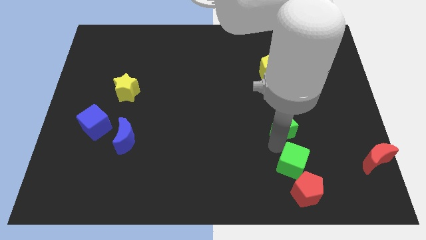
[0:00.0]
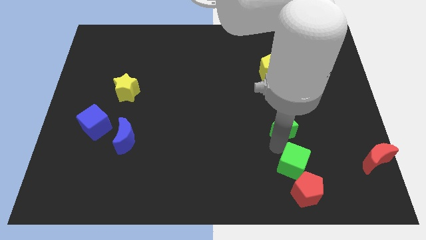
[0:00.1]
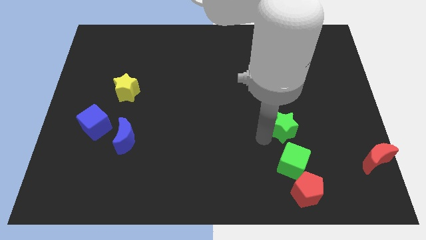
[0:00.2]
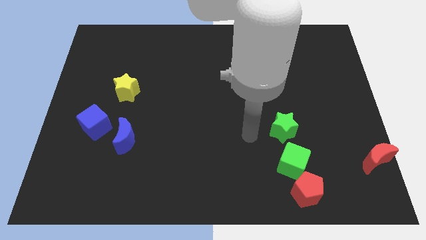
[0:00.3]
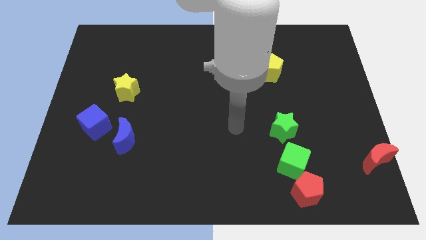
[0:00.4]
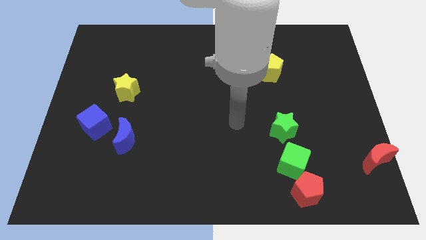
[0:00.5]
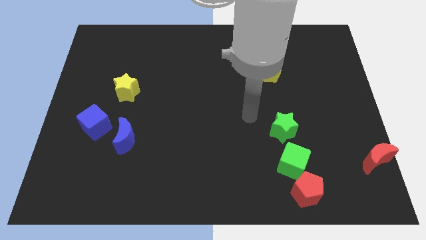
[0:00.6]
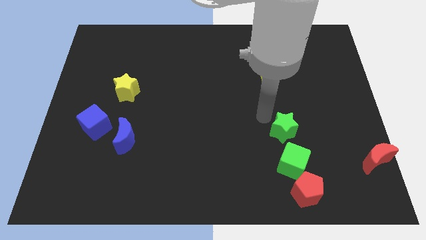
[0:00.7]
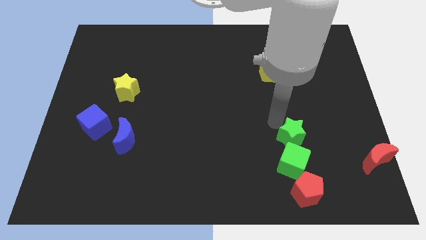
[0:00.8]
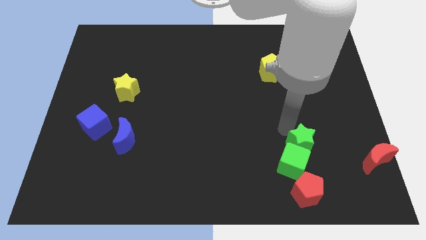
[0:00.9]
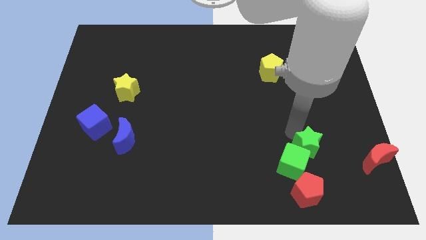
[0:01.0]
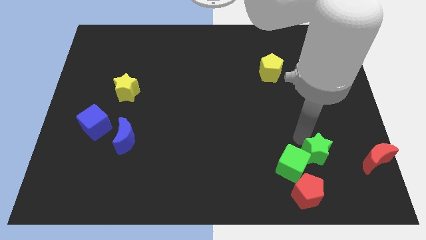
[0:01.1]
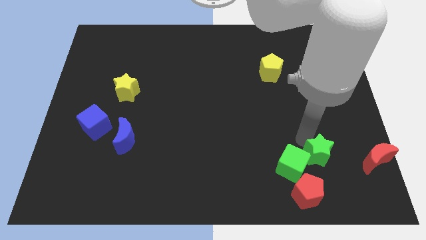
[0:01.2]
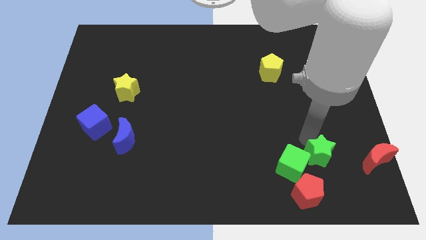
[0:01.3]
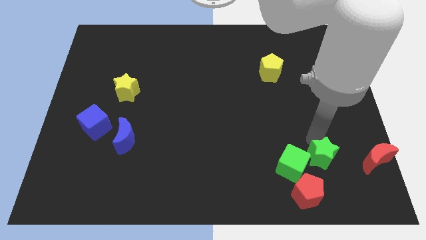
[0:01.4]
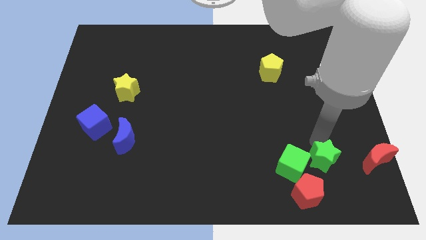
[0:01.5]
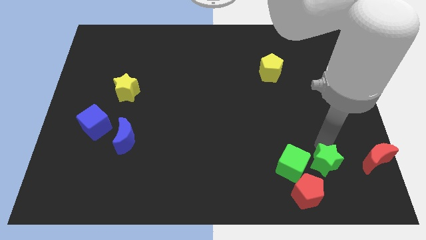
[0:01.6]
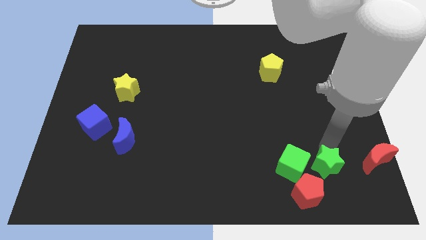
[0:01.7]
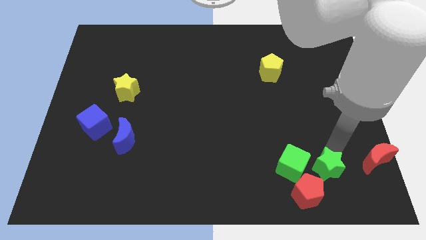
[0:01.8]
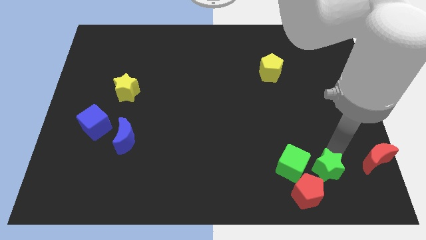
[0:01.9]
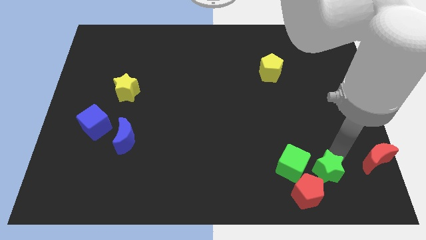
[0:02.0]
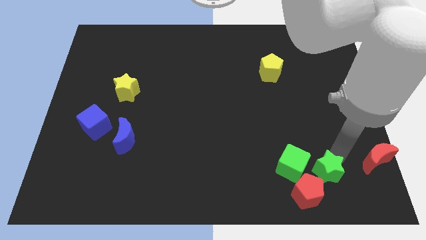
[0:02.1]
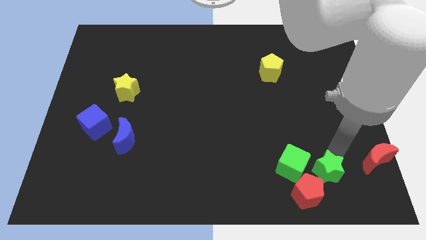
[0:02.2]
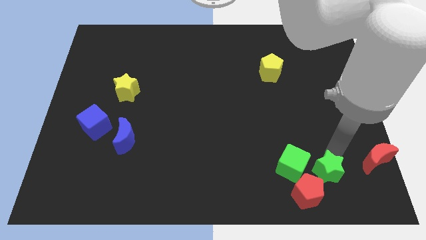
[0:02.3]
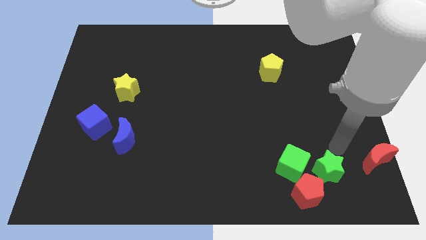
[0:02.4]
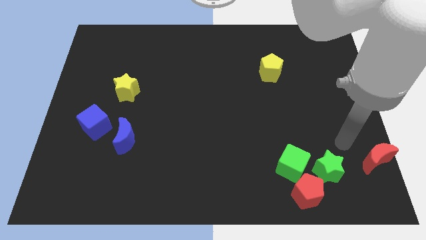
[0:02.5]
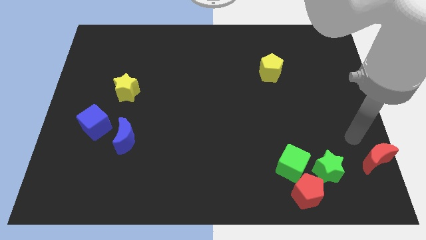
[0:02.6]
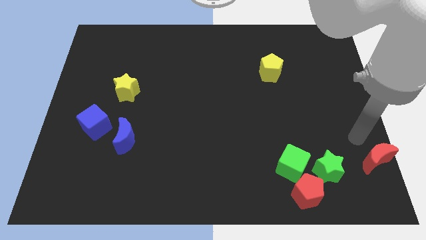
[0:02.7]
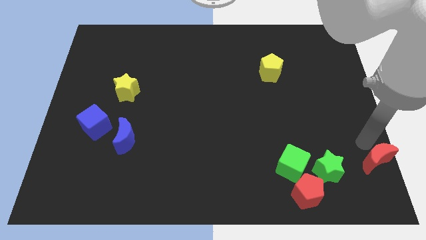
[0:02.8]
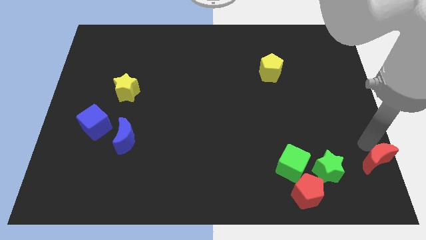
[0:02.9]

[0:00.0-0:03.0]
move the green star between the green cube and red crescent

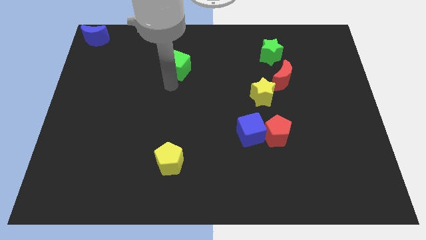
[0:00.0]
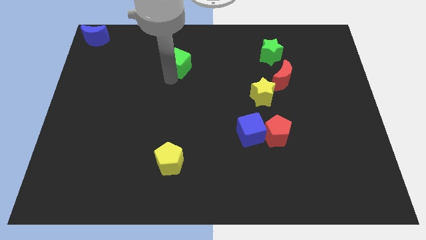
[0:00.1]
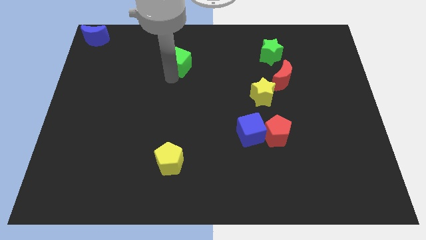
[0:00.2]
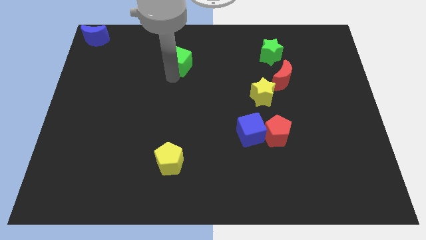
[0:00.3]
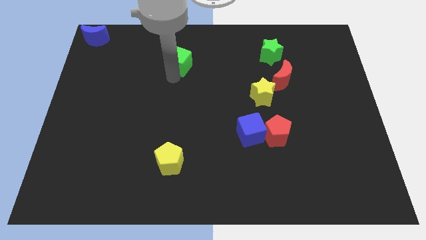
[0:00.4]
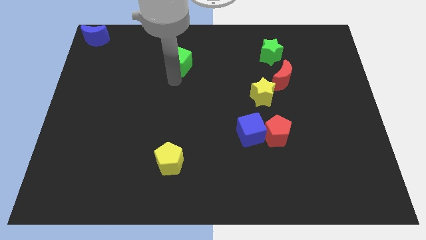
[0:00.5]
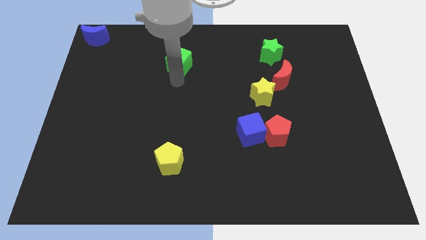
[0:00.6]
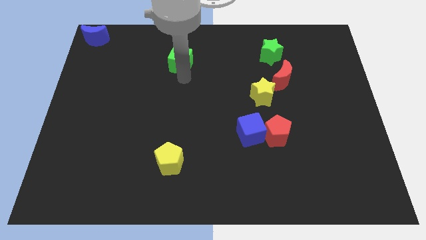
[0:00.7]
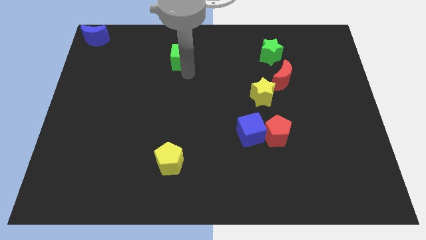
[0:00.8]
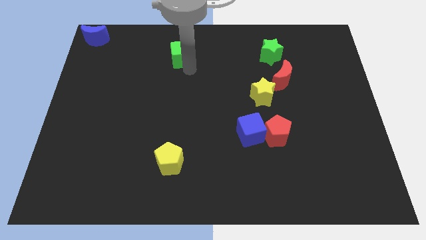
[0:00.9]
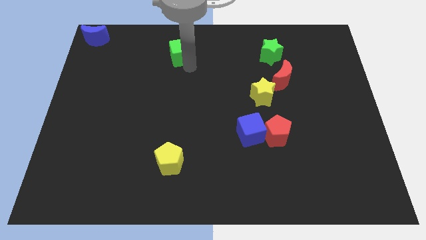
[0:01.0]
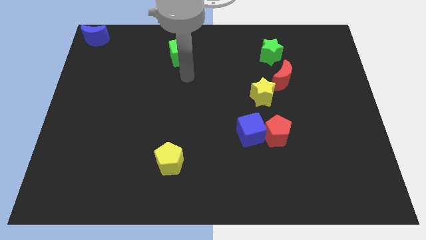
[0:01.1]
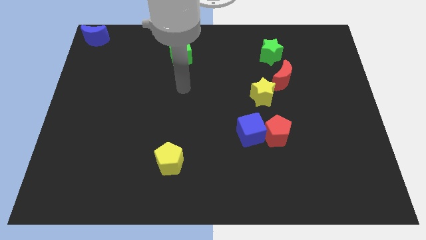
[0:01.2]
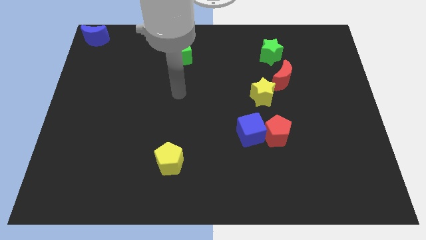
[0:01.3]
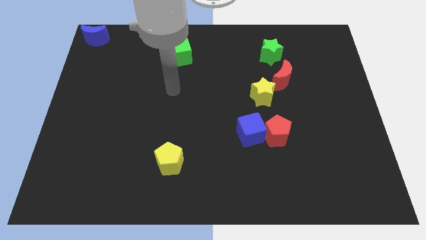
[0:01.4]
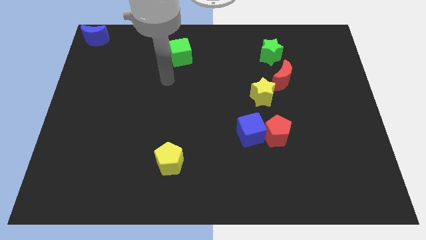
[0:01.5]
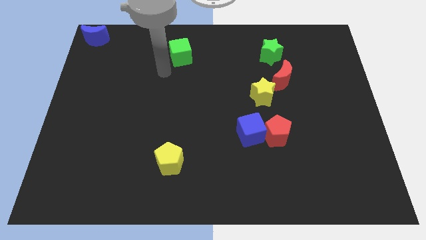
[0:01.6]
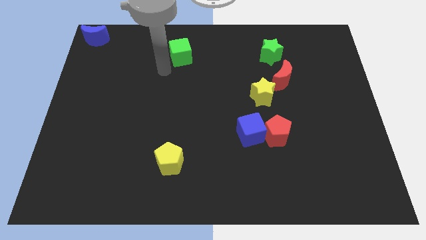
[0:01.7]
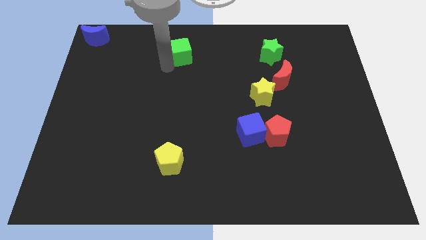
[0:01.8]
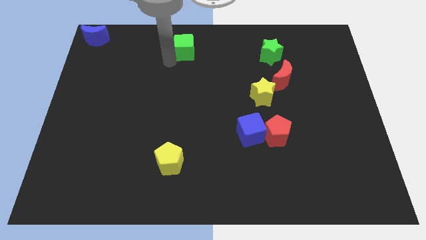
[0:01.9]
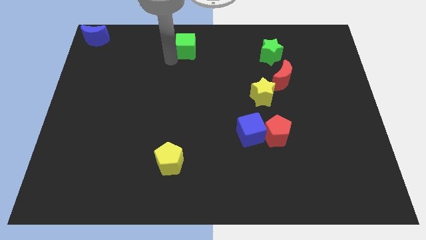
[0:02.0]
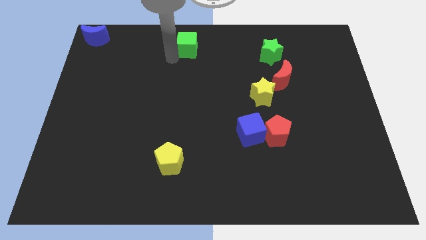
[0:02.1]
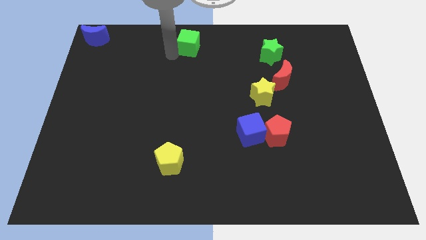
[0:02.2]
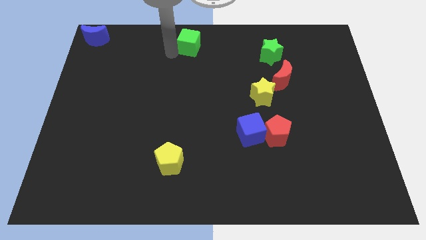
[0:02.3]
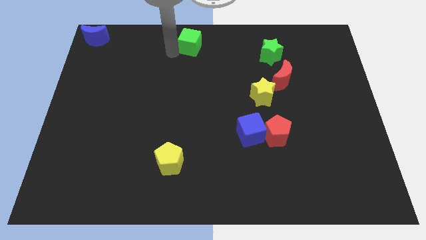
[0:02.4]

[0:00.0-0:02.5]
move green cube to the top center of the board

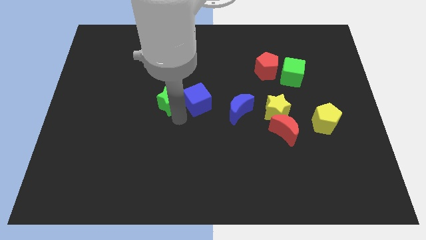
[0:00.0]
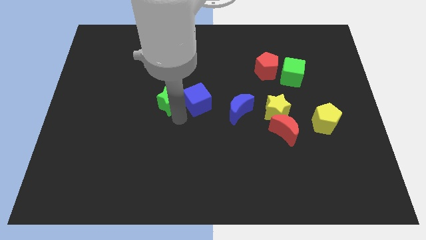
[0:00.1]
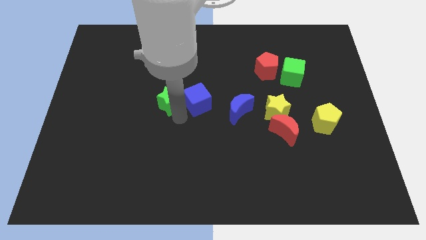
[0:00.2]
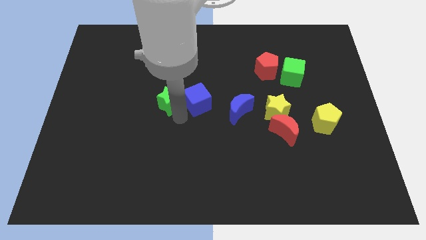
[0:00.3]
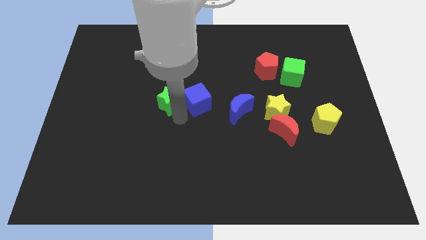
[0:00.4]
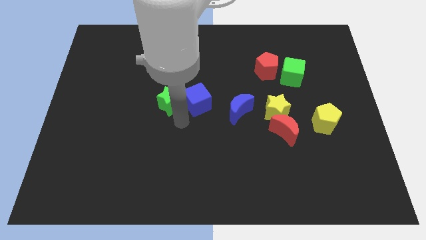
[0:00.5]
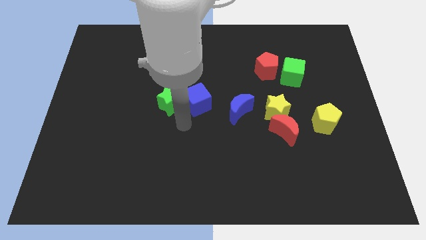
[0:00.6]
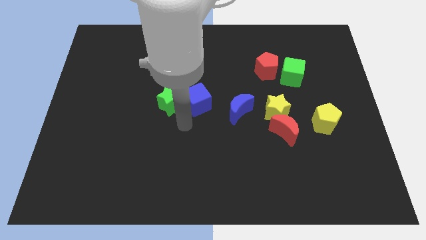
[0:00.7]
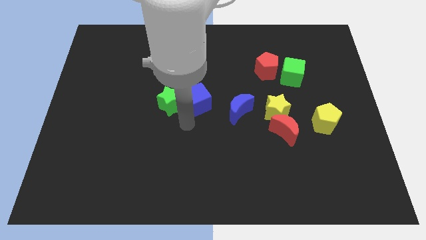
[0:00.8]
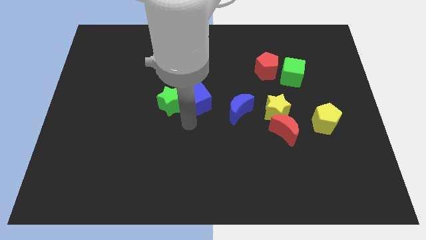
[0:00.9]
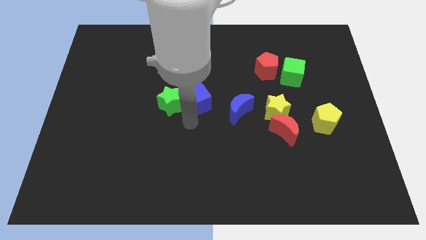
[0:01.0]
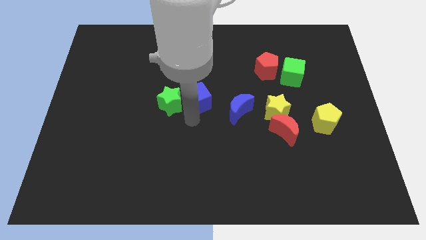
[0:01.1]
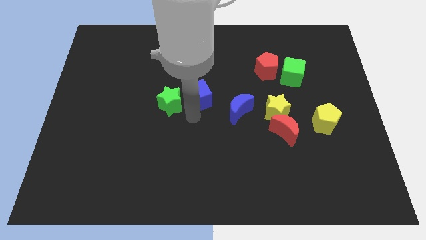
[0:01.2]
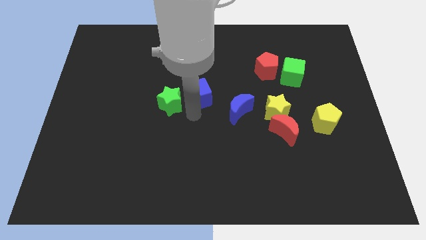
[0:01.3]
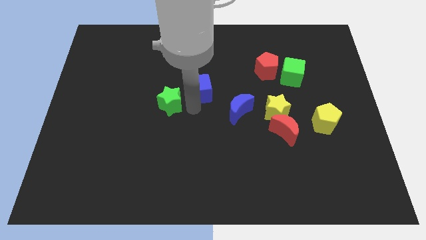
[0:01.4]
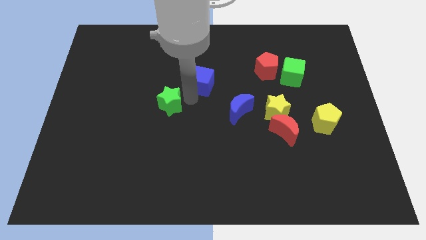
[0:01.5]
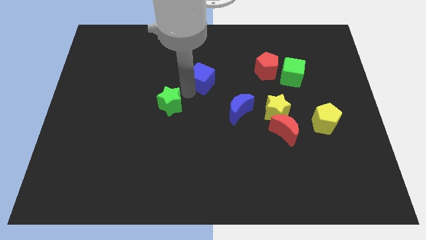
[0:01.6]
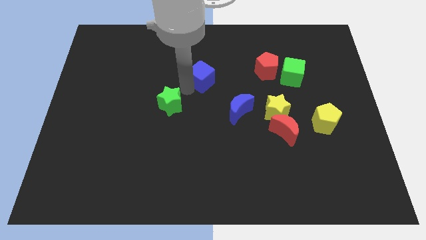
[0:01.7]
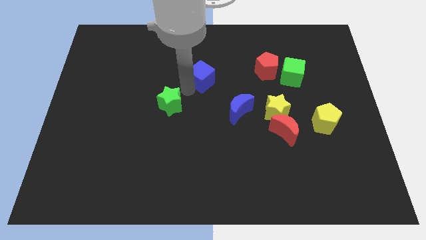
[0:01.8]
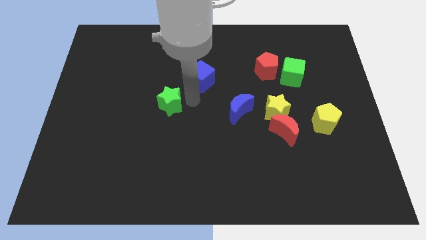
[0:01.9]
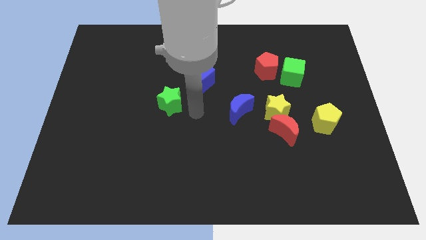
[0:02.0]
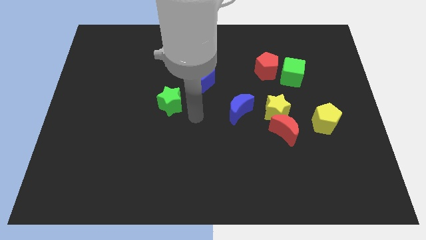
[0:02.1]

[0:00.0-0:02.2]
move the blue cube upwards

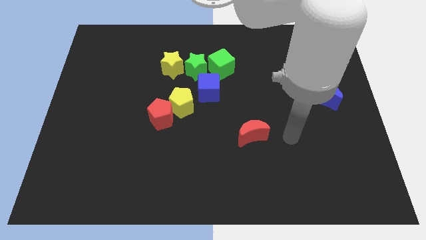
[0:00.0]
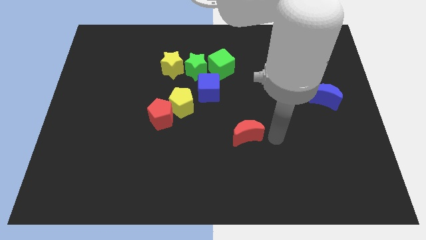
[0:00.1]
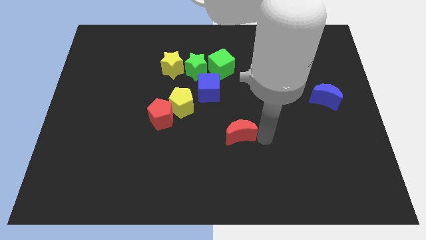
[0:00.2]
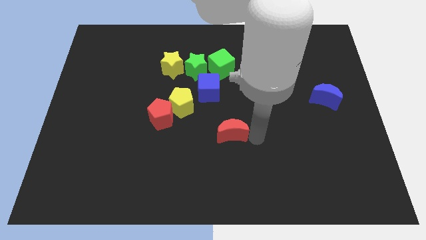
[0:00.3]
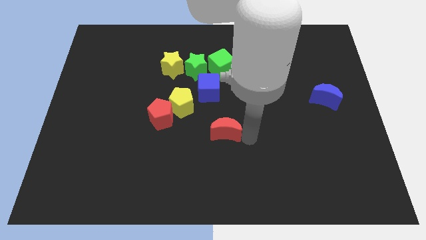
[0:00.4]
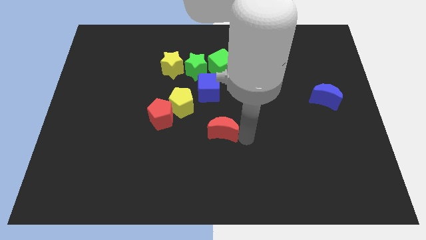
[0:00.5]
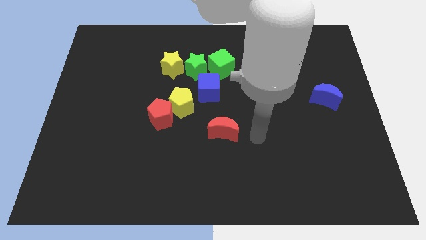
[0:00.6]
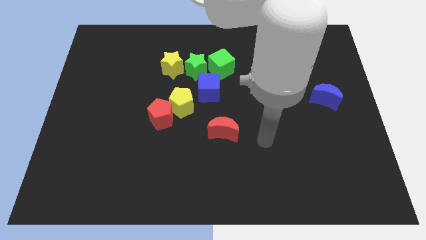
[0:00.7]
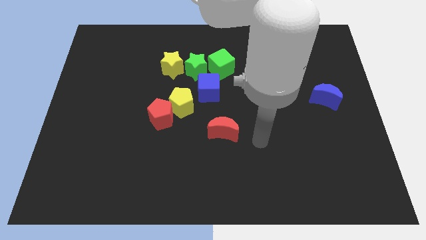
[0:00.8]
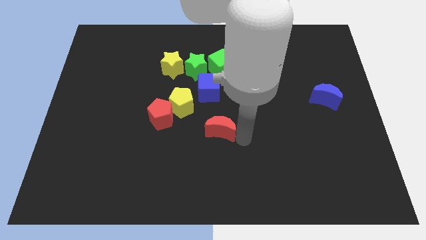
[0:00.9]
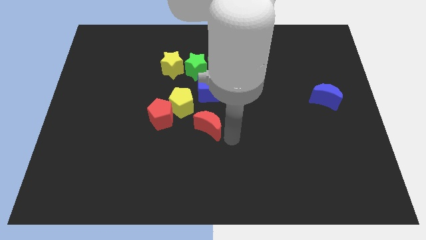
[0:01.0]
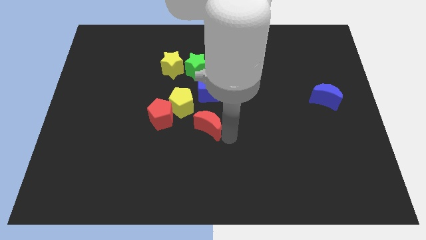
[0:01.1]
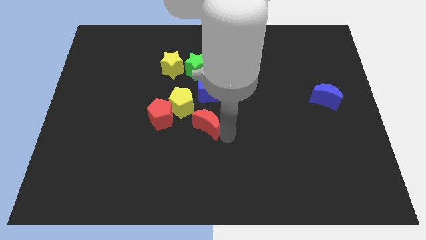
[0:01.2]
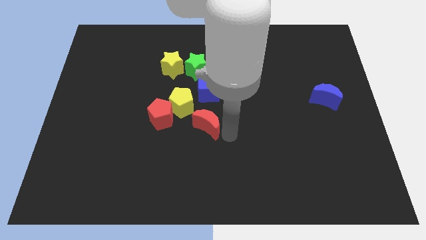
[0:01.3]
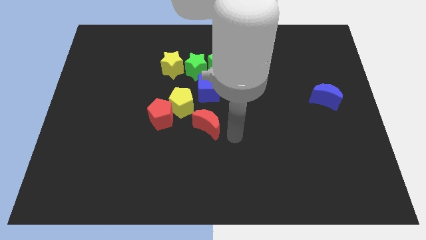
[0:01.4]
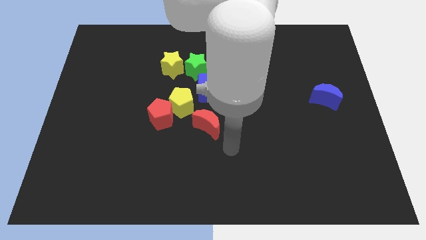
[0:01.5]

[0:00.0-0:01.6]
move the red crescent close to the yellow pentagon
